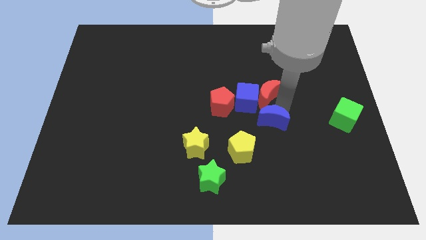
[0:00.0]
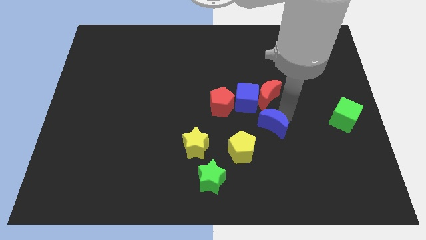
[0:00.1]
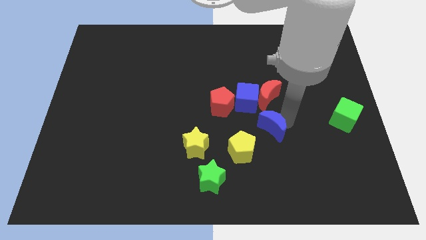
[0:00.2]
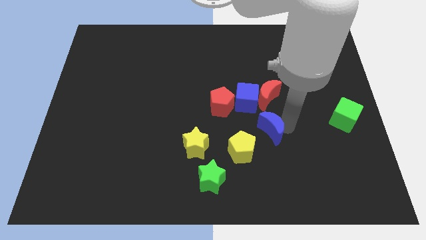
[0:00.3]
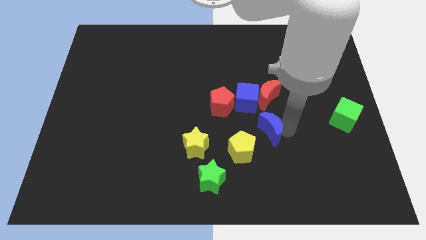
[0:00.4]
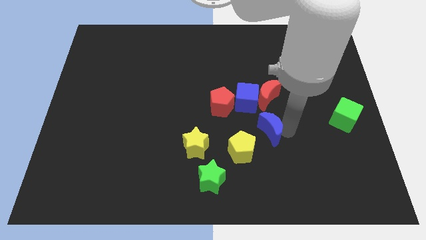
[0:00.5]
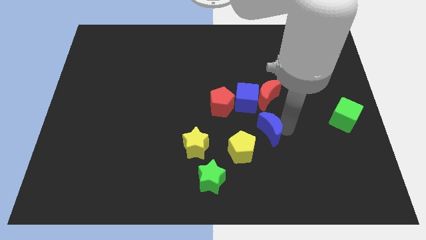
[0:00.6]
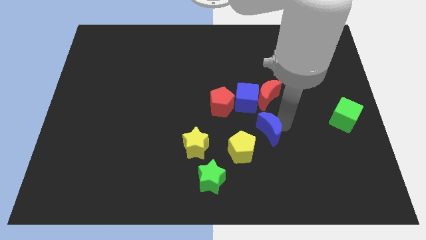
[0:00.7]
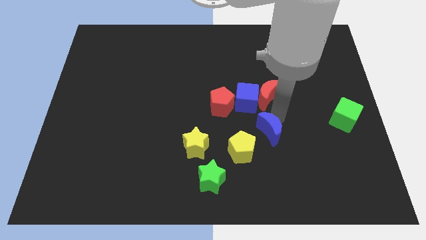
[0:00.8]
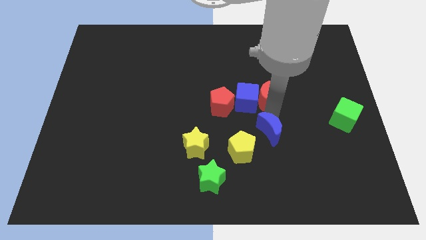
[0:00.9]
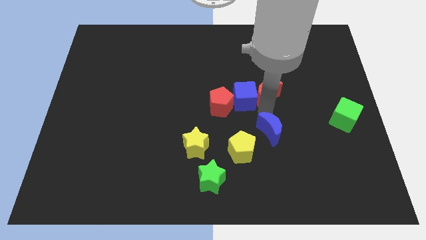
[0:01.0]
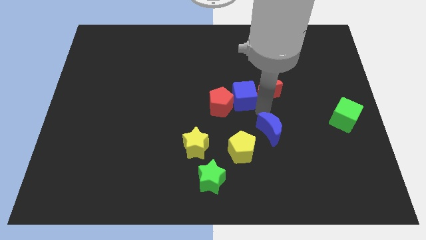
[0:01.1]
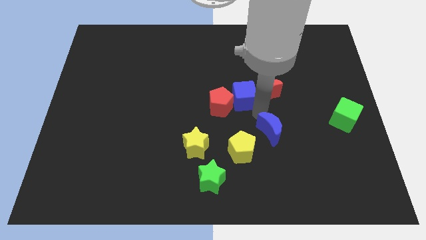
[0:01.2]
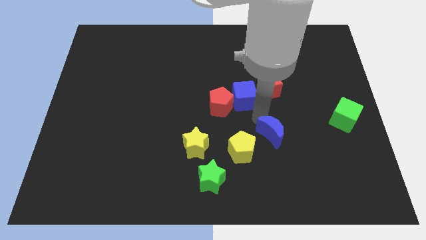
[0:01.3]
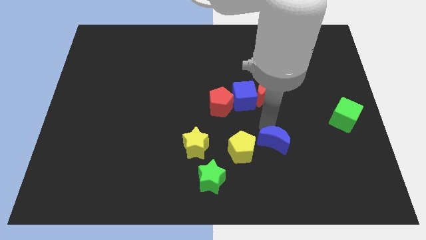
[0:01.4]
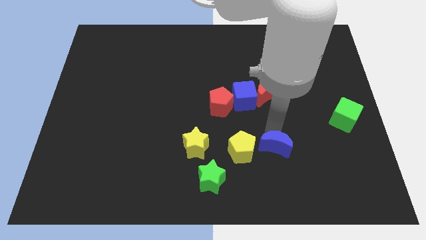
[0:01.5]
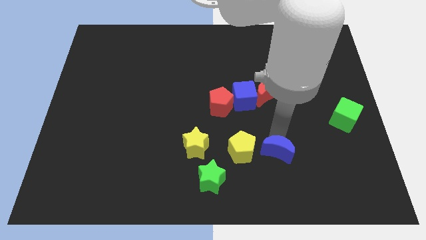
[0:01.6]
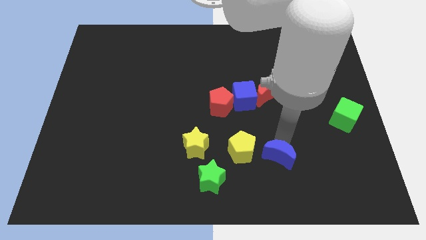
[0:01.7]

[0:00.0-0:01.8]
push the blue crescent towards the right side of the yellow pentagon

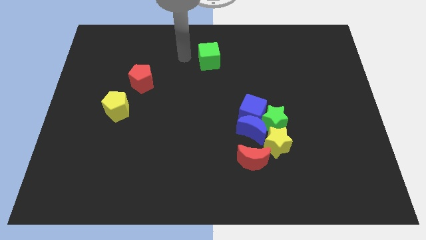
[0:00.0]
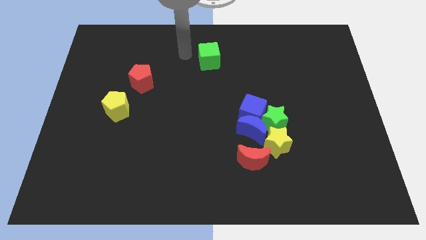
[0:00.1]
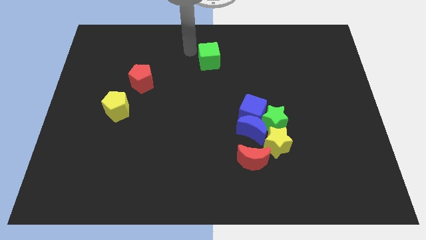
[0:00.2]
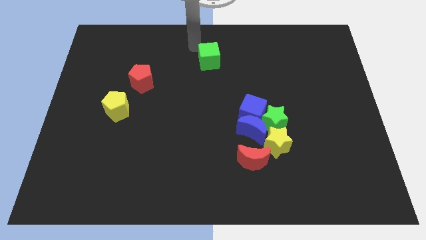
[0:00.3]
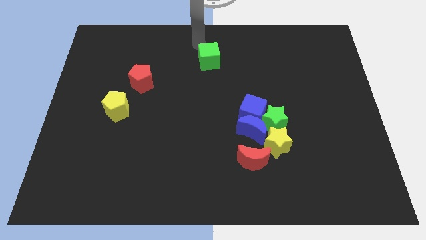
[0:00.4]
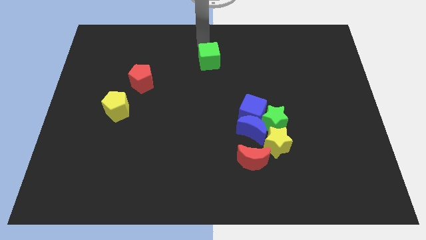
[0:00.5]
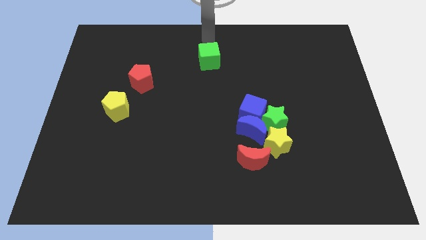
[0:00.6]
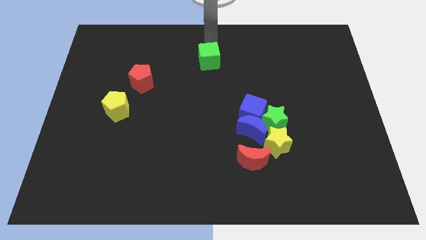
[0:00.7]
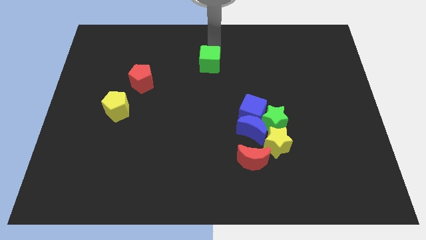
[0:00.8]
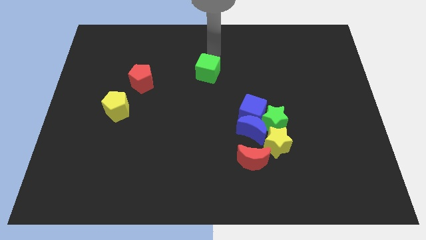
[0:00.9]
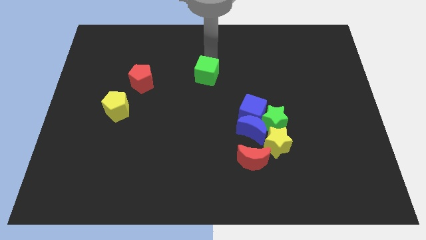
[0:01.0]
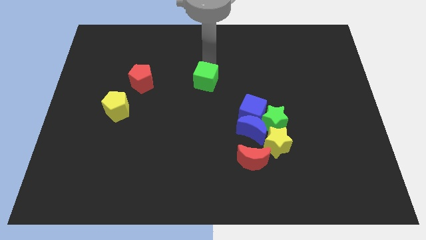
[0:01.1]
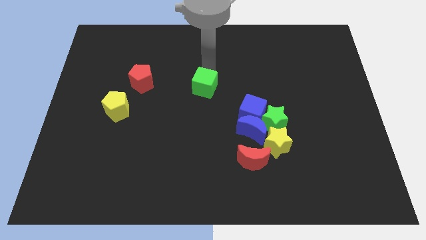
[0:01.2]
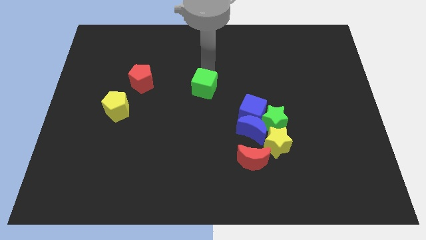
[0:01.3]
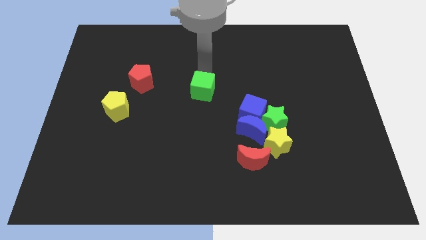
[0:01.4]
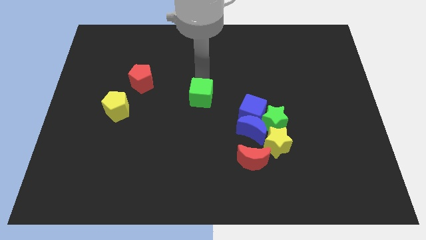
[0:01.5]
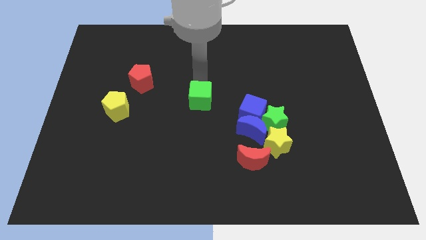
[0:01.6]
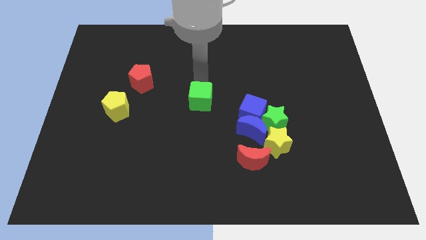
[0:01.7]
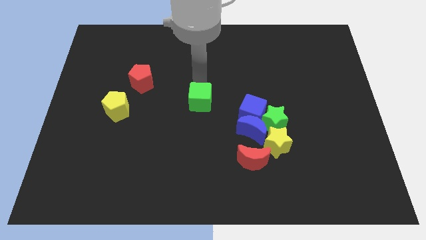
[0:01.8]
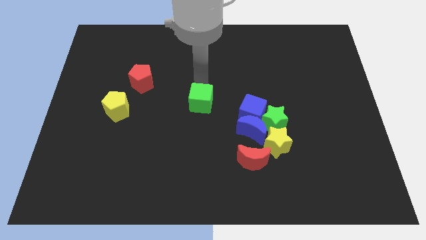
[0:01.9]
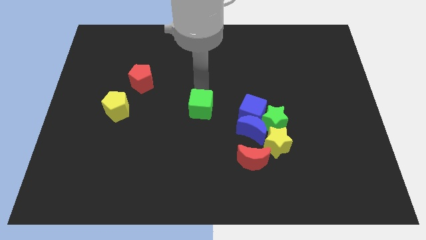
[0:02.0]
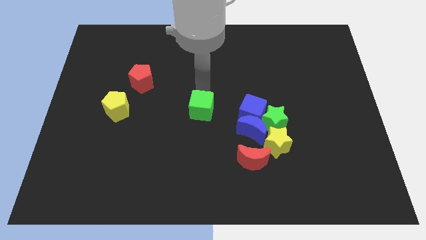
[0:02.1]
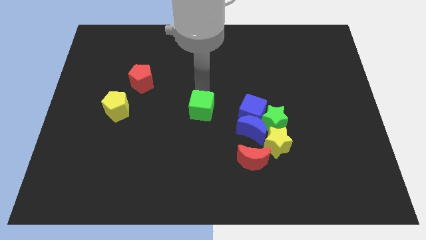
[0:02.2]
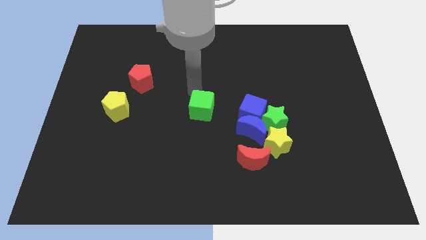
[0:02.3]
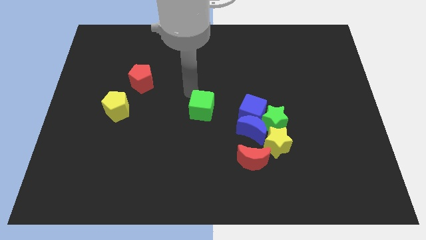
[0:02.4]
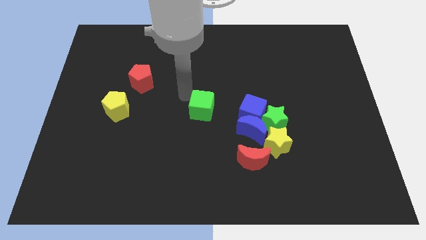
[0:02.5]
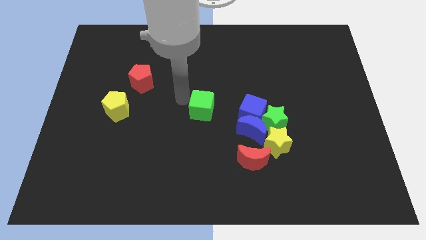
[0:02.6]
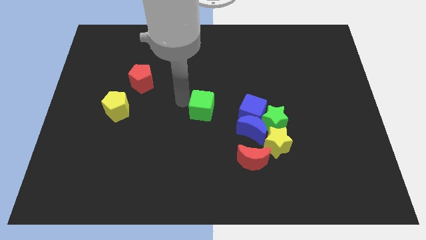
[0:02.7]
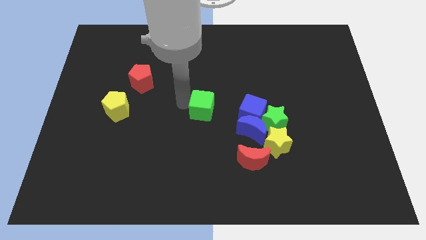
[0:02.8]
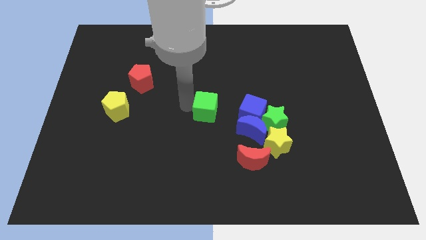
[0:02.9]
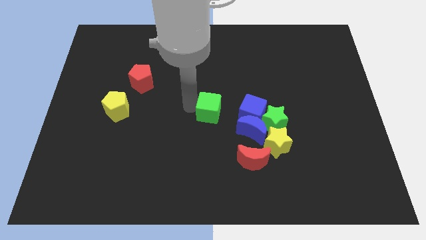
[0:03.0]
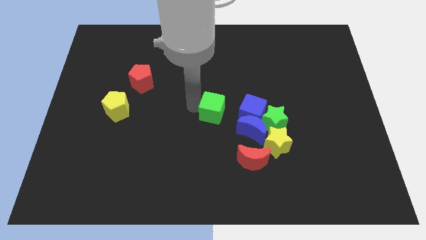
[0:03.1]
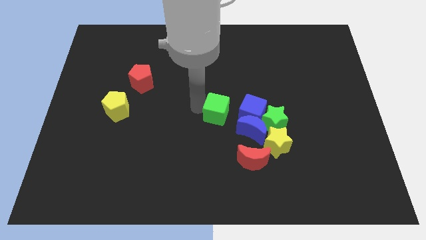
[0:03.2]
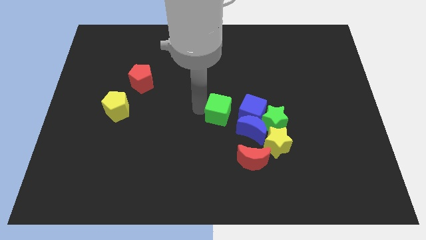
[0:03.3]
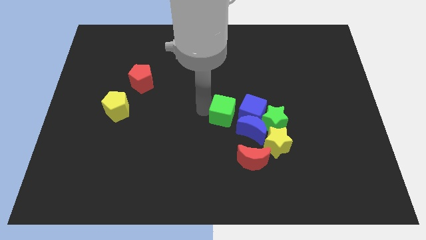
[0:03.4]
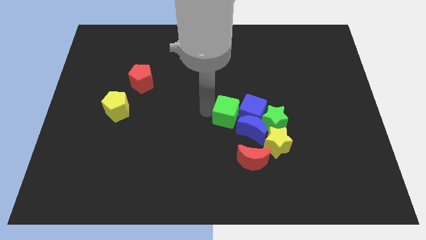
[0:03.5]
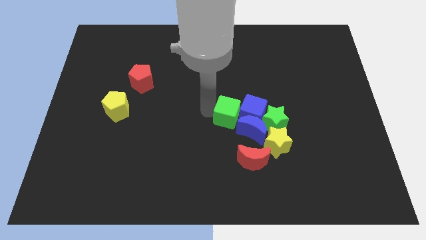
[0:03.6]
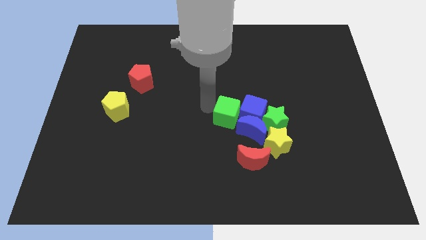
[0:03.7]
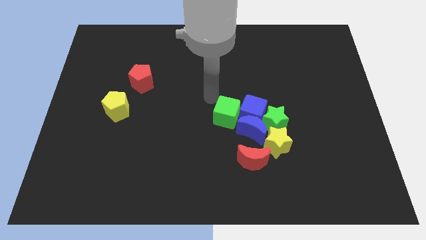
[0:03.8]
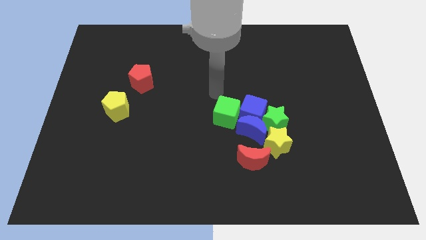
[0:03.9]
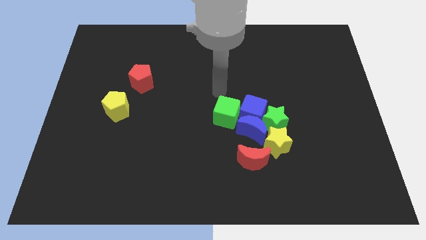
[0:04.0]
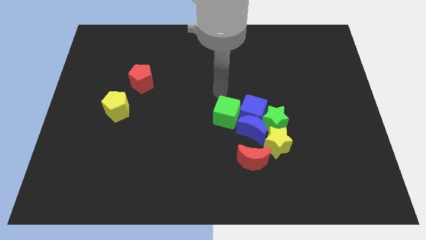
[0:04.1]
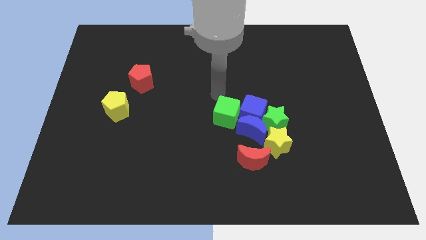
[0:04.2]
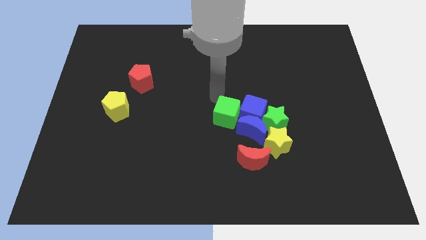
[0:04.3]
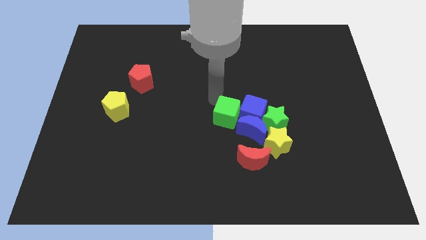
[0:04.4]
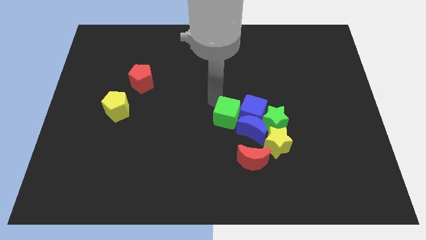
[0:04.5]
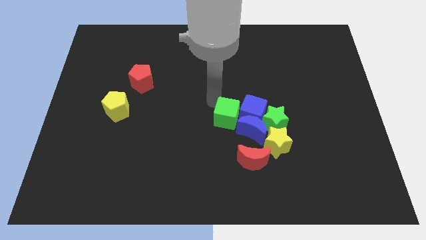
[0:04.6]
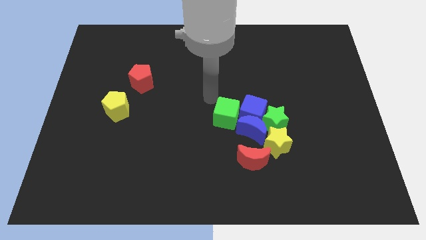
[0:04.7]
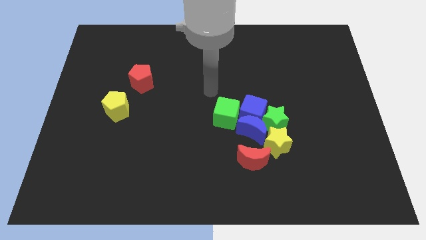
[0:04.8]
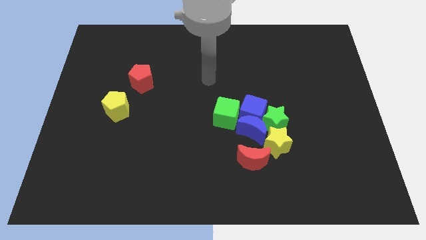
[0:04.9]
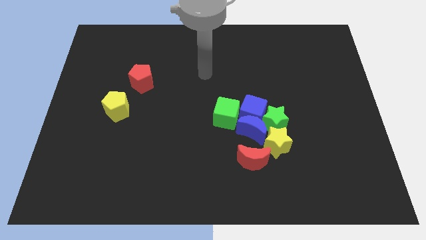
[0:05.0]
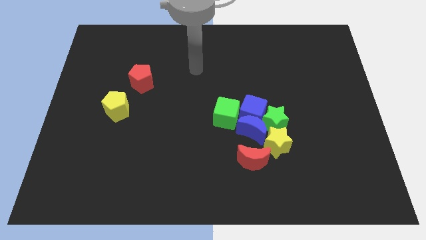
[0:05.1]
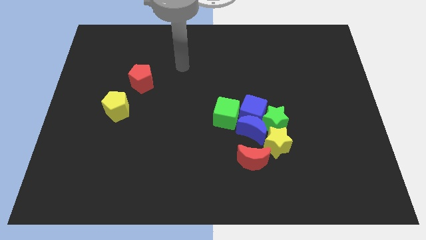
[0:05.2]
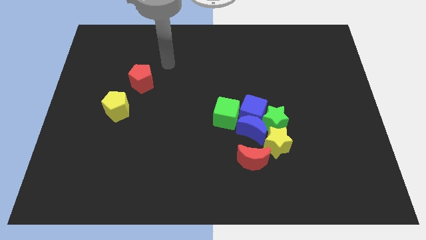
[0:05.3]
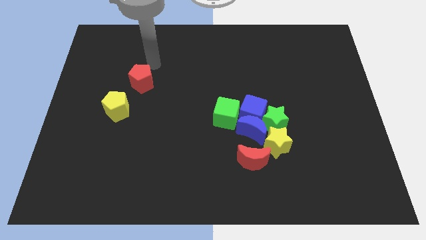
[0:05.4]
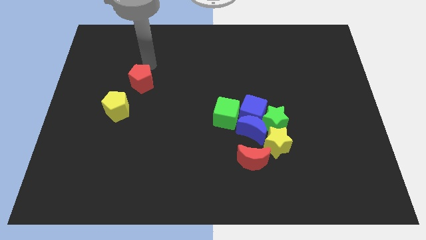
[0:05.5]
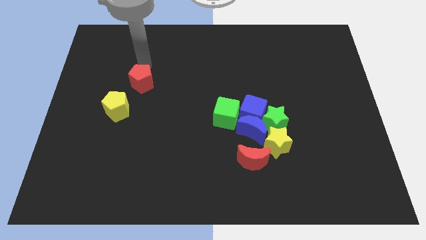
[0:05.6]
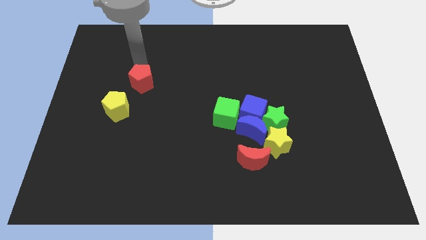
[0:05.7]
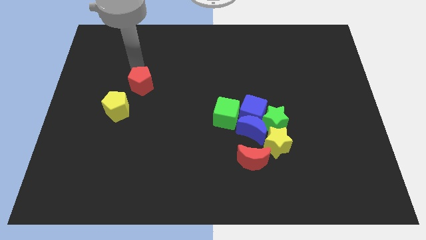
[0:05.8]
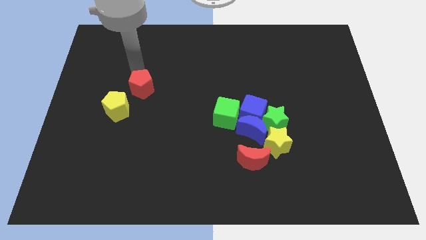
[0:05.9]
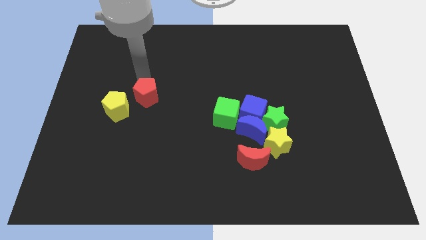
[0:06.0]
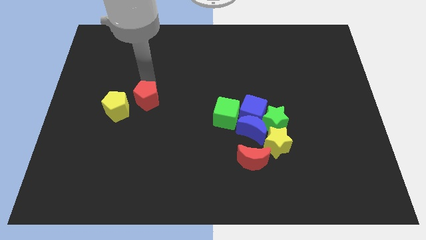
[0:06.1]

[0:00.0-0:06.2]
move the green cube left beside the blue cube

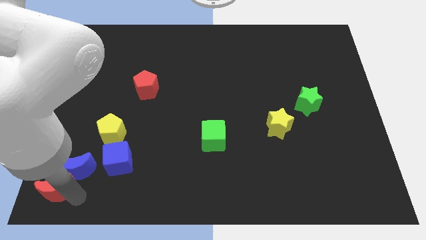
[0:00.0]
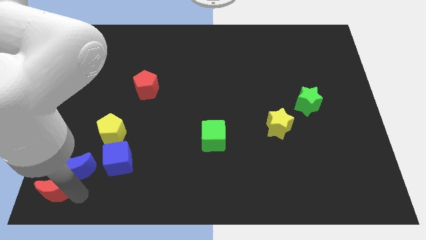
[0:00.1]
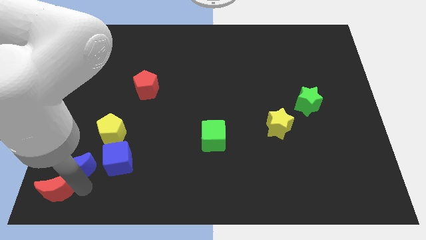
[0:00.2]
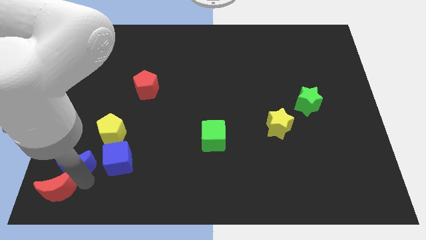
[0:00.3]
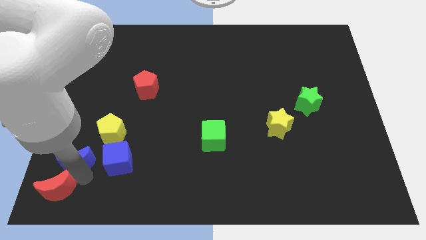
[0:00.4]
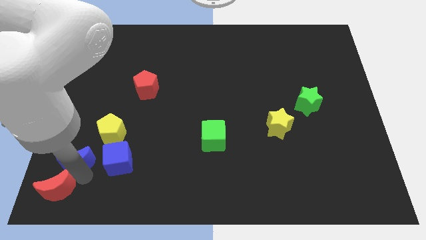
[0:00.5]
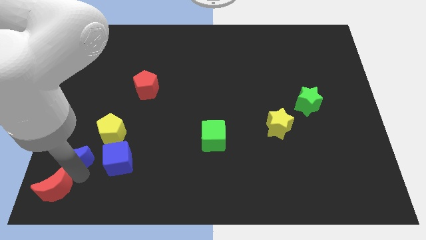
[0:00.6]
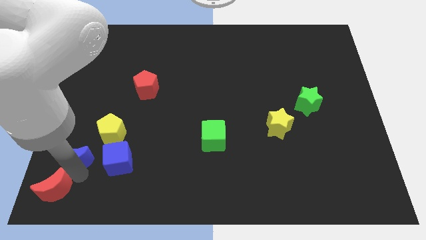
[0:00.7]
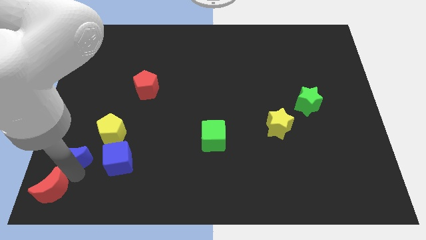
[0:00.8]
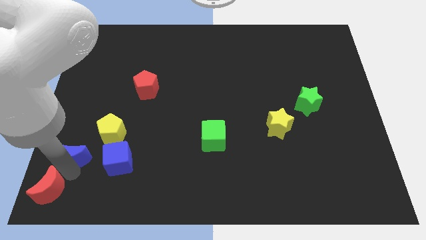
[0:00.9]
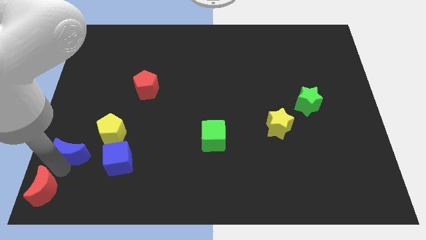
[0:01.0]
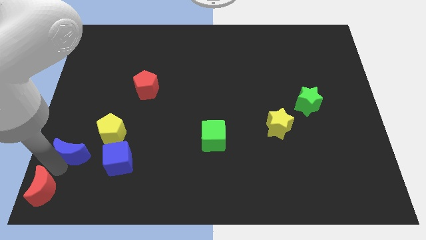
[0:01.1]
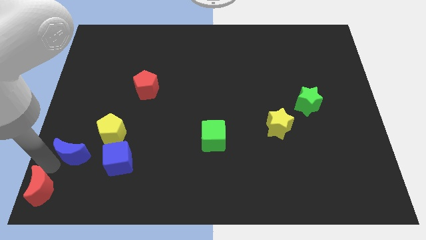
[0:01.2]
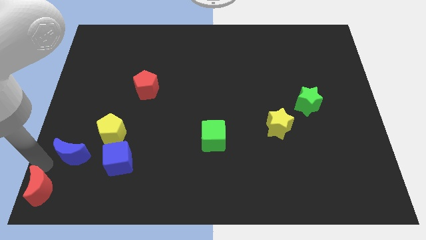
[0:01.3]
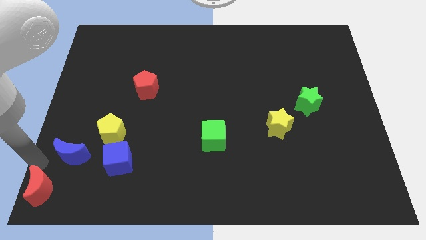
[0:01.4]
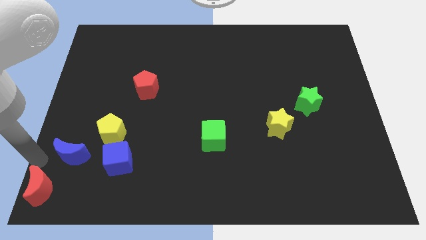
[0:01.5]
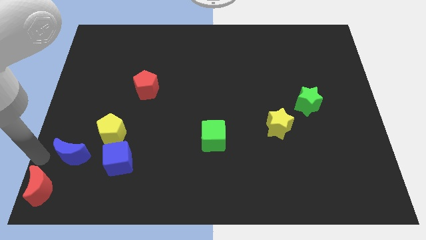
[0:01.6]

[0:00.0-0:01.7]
move the red crescent to the bottom left corner
